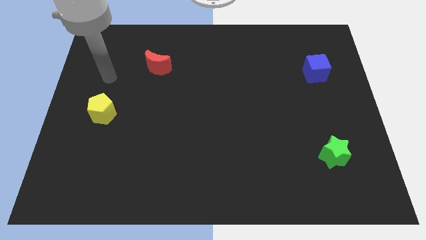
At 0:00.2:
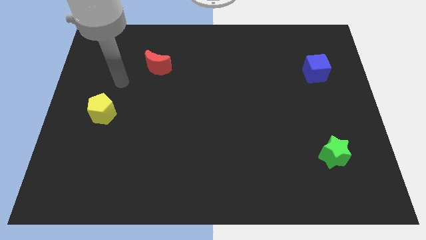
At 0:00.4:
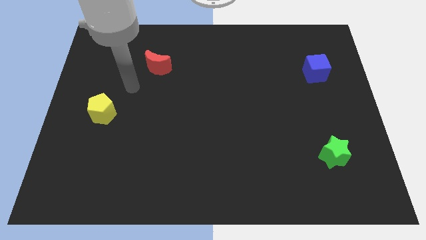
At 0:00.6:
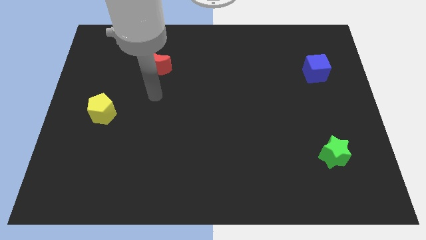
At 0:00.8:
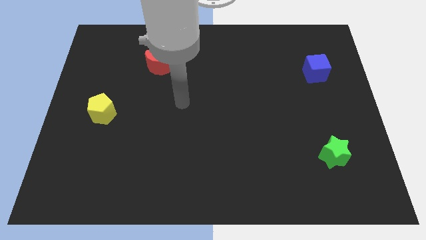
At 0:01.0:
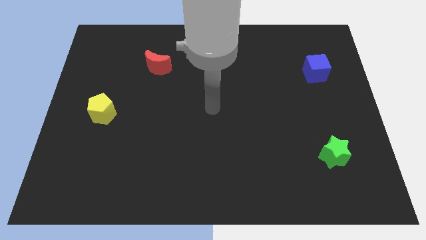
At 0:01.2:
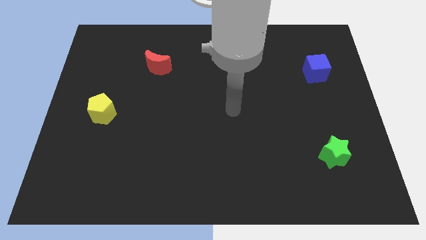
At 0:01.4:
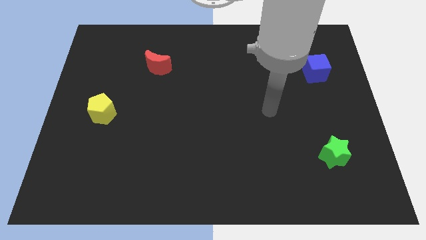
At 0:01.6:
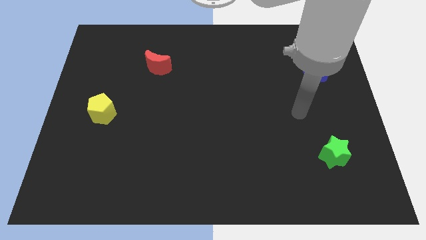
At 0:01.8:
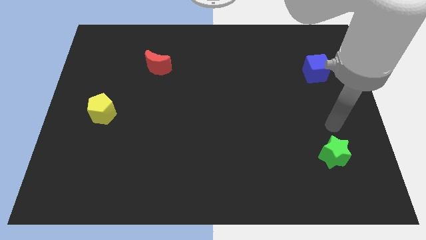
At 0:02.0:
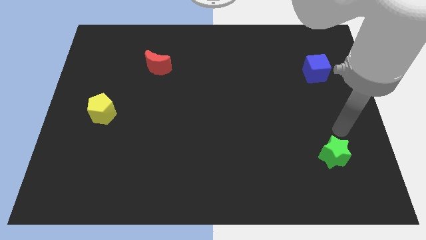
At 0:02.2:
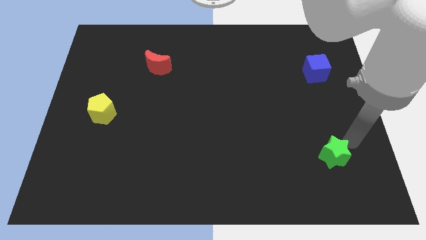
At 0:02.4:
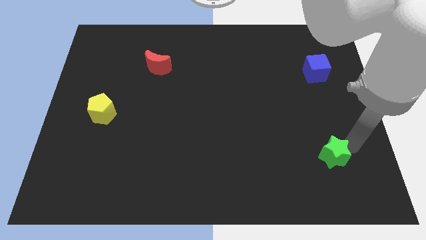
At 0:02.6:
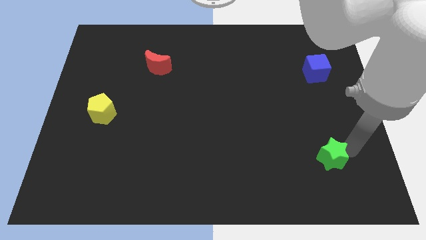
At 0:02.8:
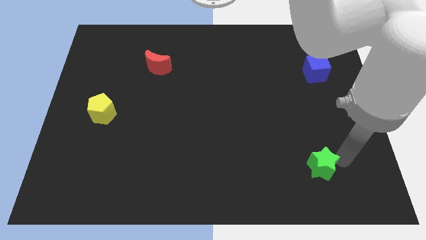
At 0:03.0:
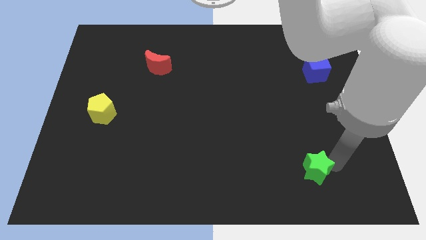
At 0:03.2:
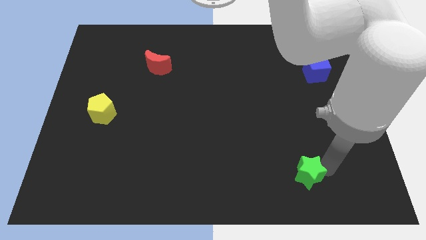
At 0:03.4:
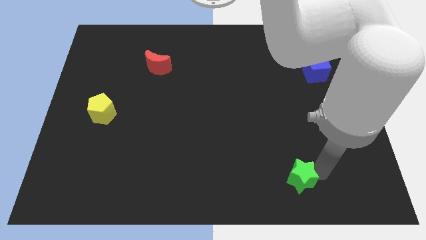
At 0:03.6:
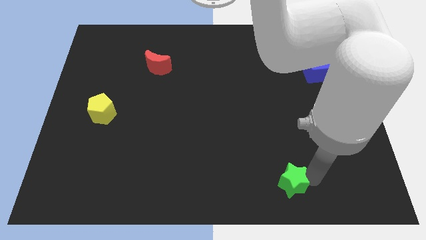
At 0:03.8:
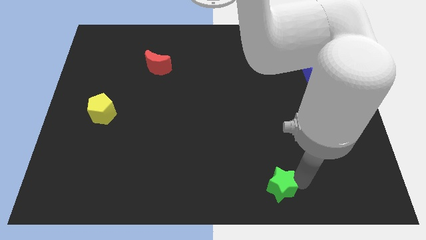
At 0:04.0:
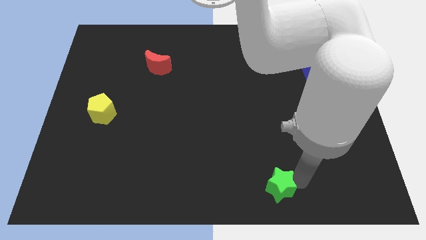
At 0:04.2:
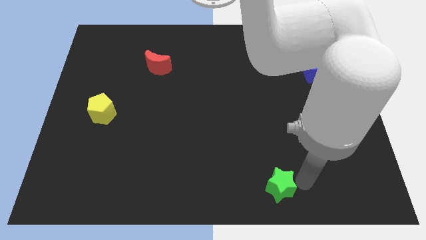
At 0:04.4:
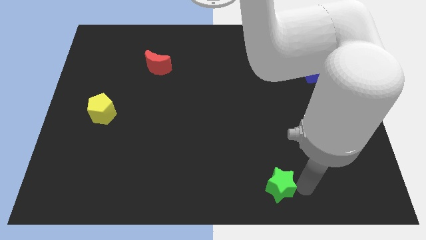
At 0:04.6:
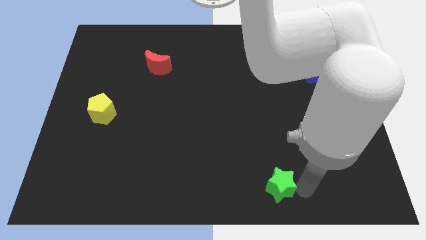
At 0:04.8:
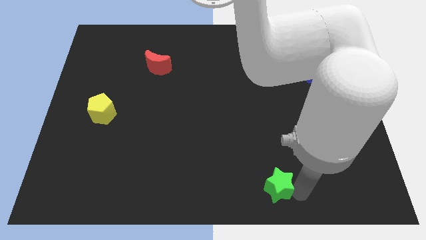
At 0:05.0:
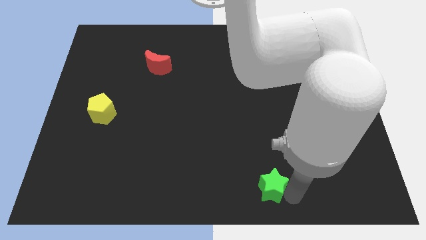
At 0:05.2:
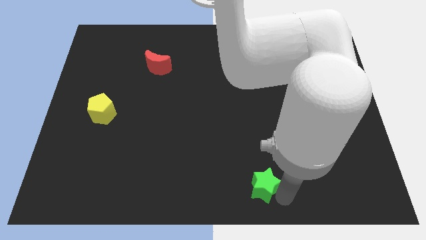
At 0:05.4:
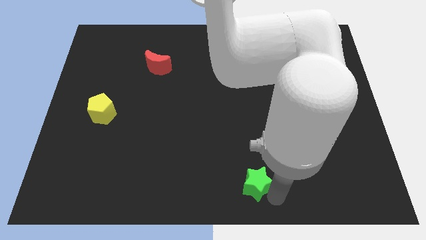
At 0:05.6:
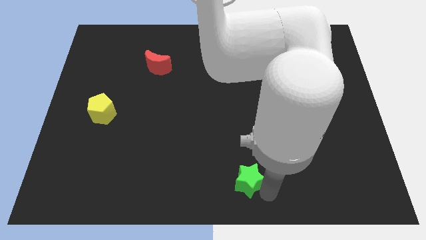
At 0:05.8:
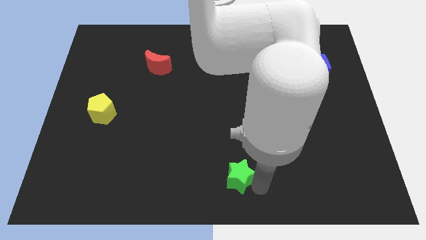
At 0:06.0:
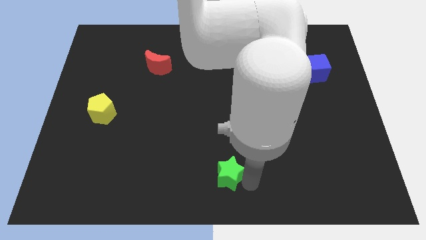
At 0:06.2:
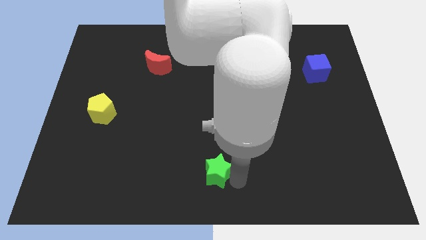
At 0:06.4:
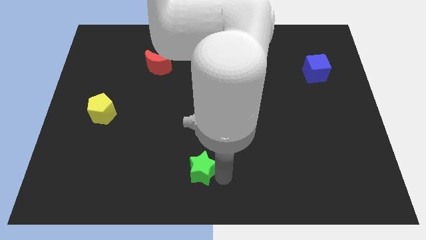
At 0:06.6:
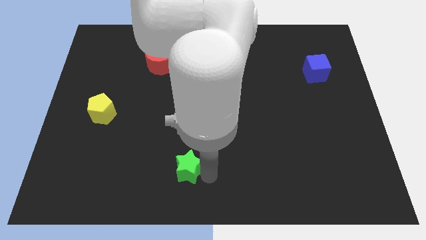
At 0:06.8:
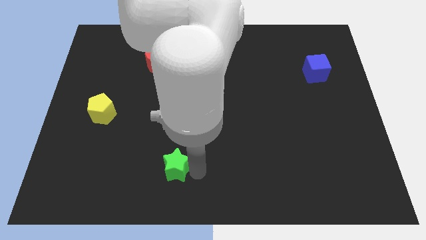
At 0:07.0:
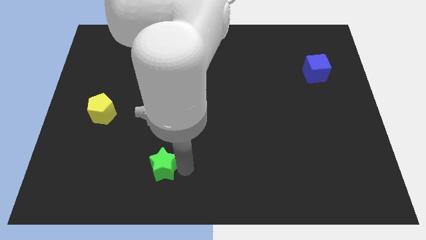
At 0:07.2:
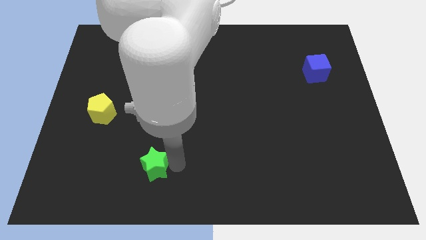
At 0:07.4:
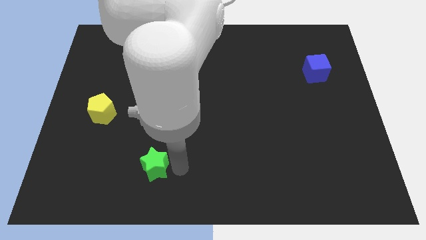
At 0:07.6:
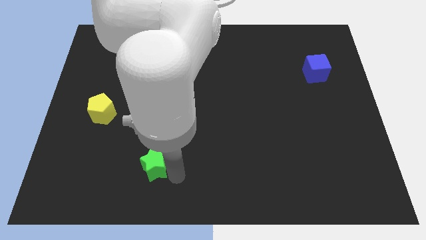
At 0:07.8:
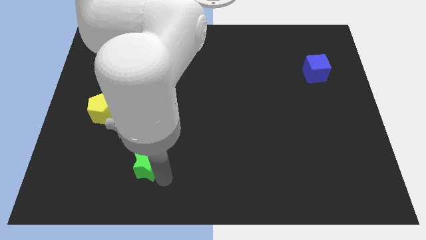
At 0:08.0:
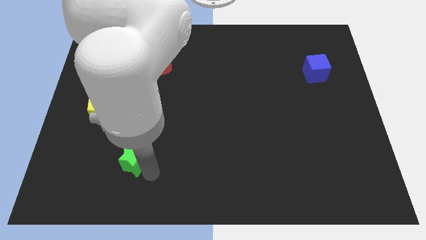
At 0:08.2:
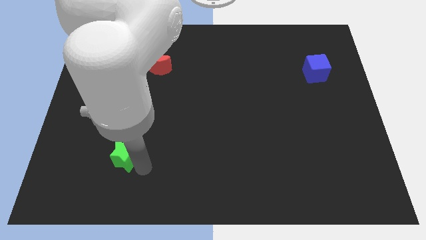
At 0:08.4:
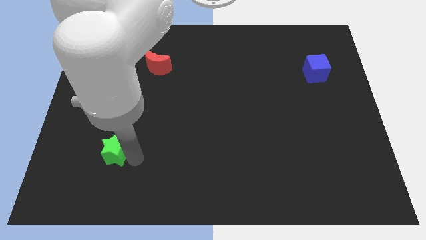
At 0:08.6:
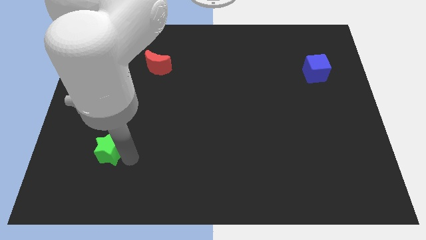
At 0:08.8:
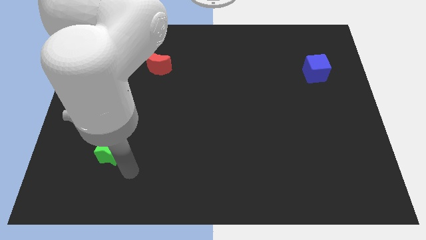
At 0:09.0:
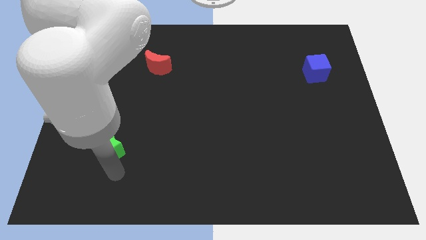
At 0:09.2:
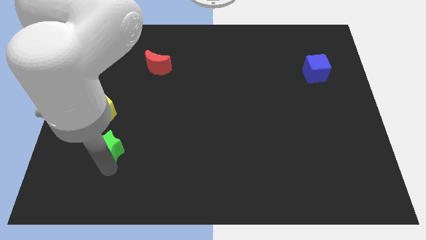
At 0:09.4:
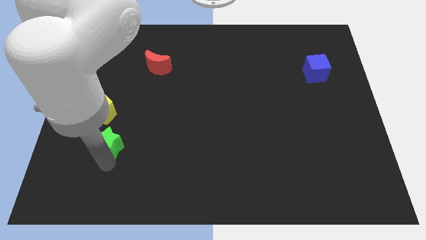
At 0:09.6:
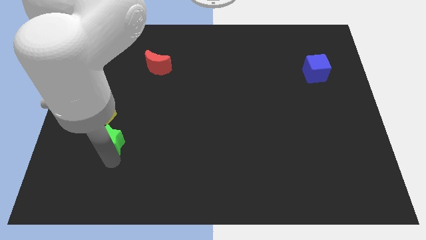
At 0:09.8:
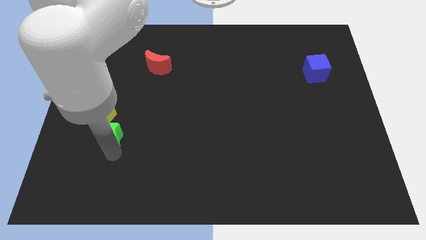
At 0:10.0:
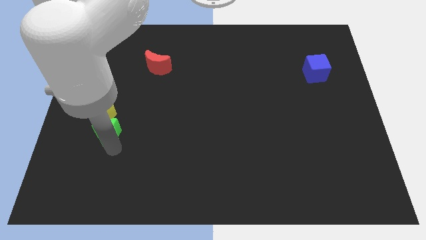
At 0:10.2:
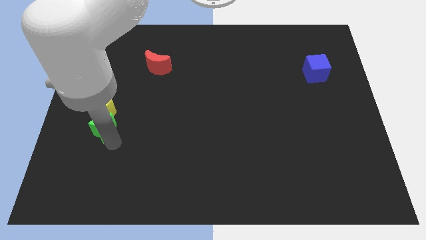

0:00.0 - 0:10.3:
put the green star close to the yellow block

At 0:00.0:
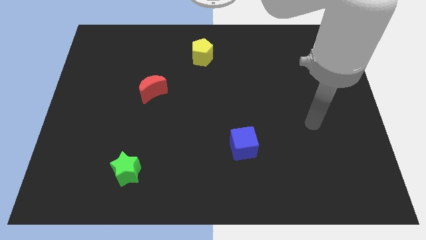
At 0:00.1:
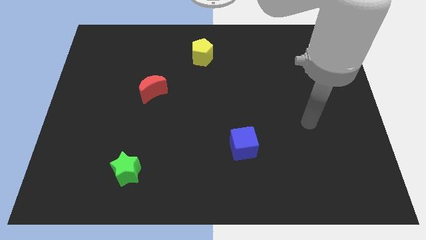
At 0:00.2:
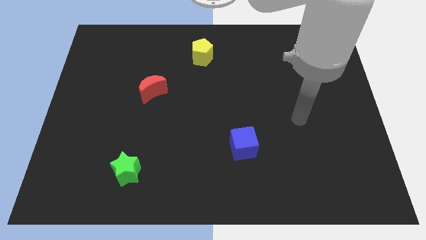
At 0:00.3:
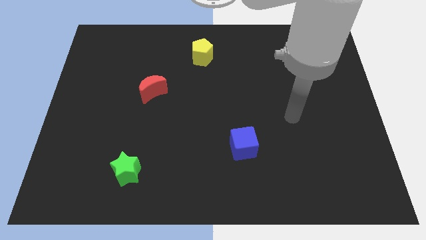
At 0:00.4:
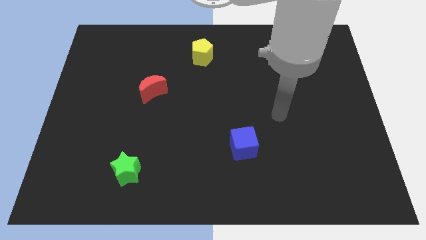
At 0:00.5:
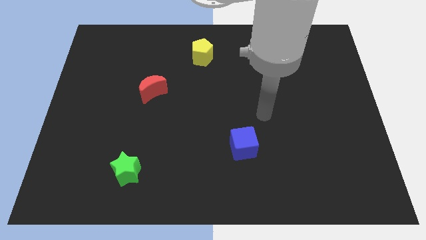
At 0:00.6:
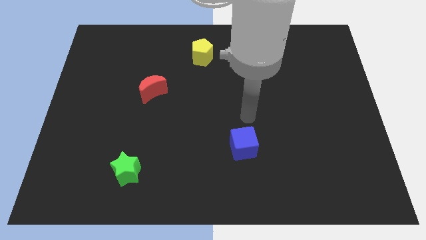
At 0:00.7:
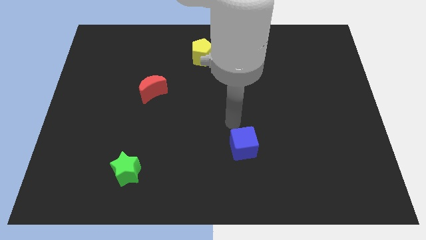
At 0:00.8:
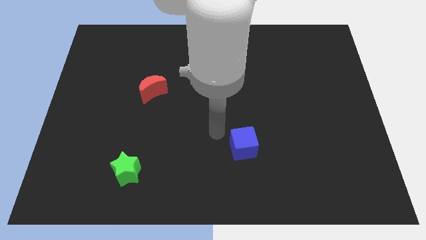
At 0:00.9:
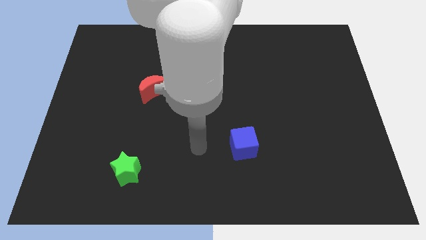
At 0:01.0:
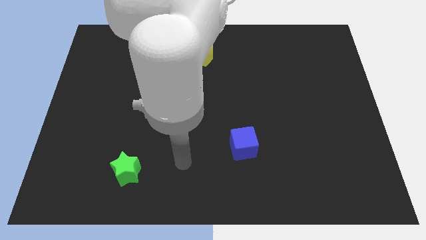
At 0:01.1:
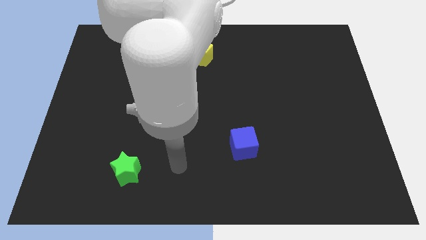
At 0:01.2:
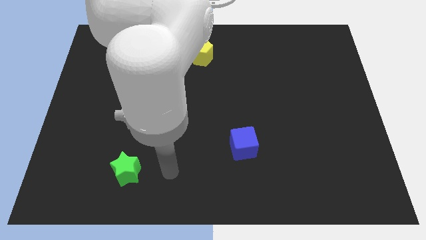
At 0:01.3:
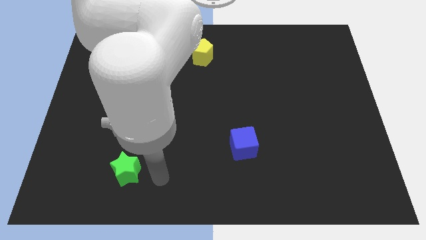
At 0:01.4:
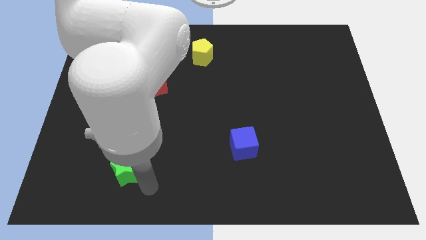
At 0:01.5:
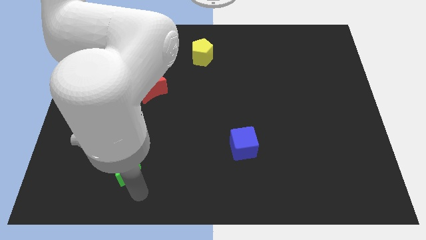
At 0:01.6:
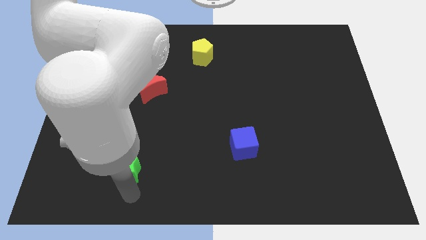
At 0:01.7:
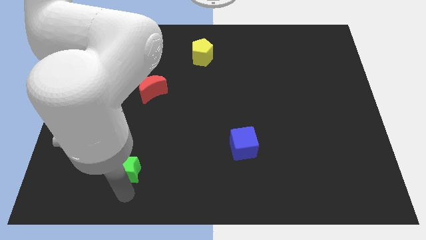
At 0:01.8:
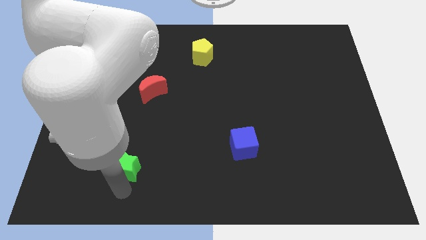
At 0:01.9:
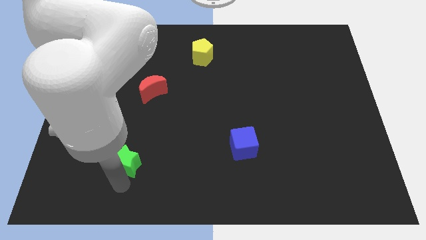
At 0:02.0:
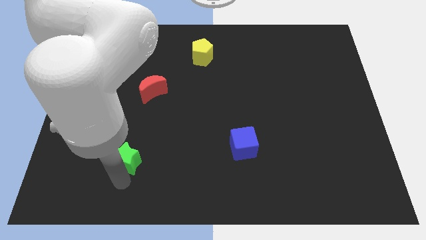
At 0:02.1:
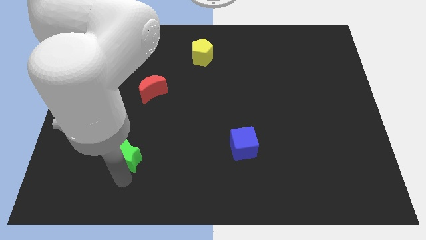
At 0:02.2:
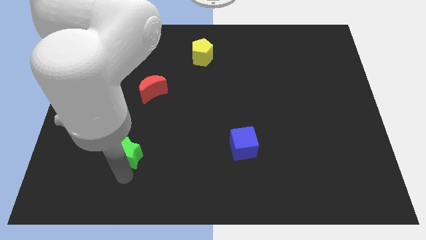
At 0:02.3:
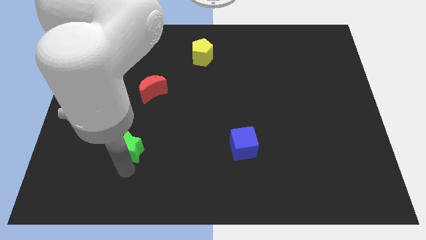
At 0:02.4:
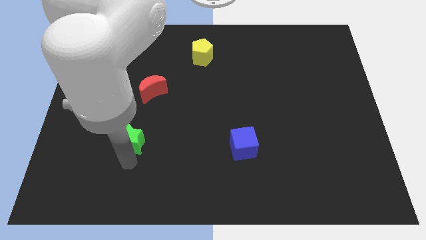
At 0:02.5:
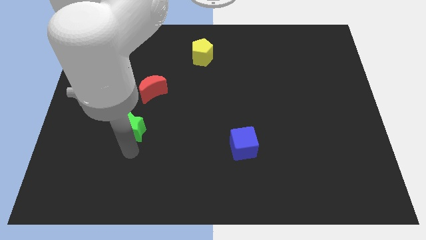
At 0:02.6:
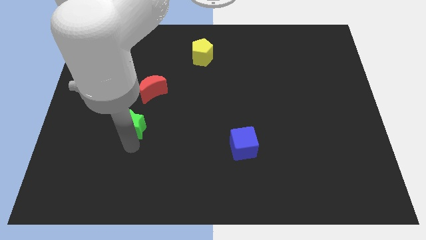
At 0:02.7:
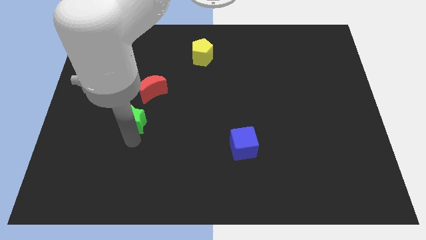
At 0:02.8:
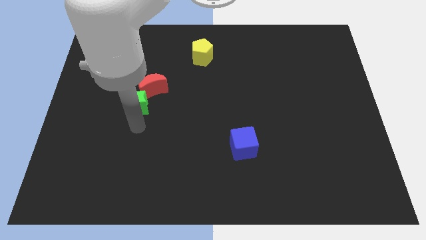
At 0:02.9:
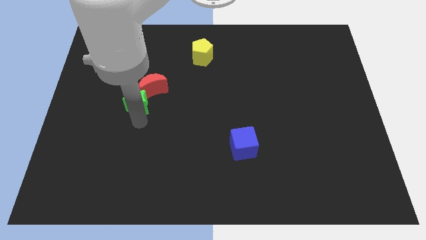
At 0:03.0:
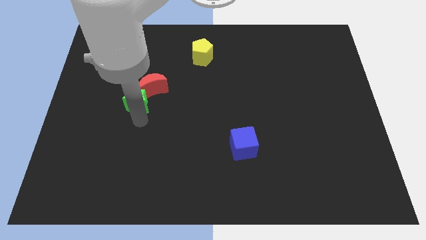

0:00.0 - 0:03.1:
slide the green star towards the red block

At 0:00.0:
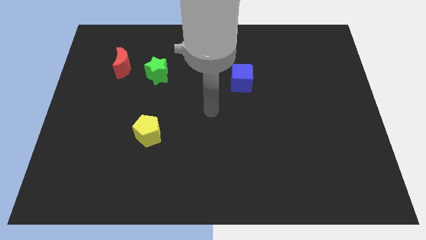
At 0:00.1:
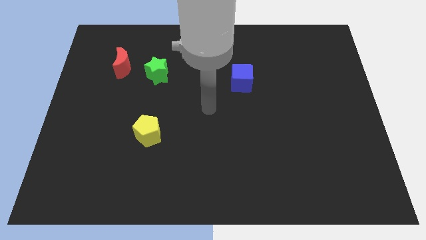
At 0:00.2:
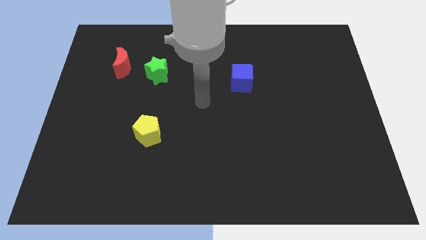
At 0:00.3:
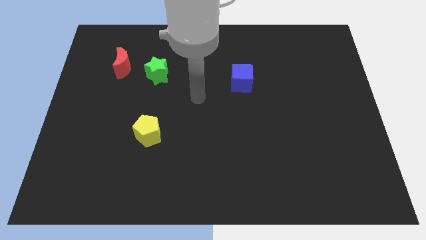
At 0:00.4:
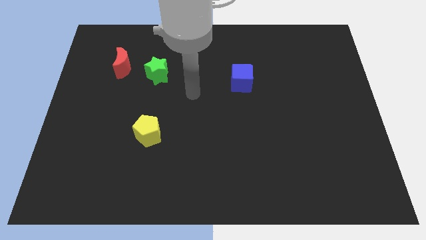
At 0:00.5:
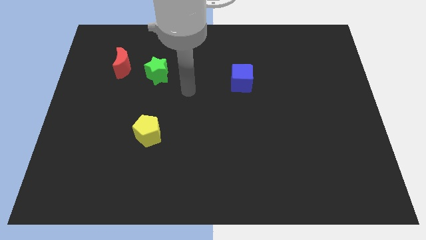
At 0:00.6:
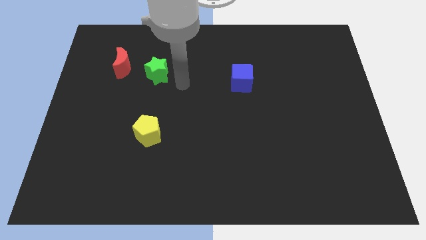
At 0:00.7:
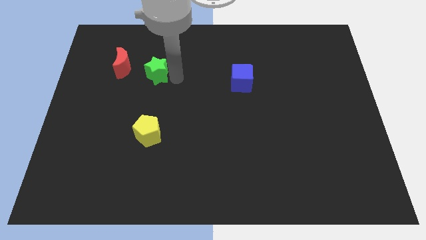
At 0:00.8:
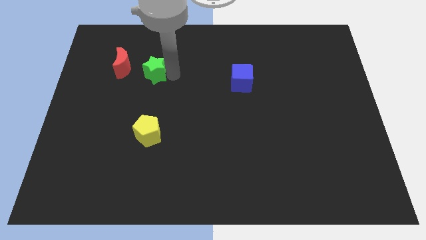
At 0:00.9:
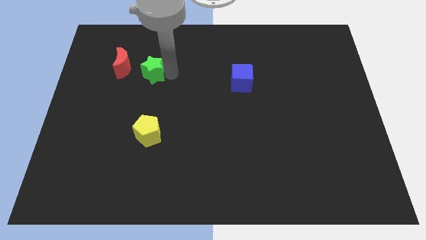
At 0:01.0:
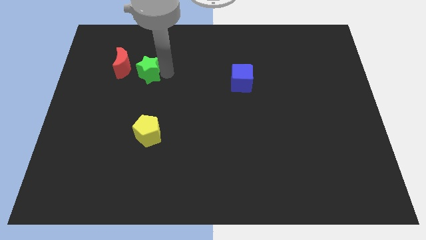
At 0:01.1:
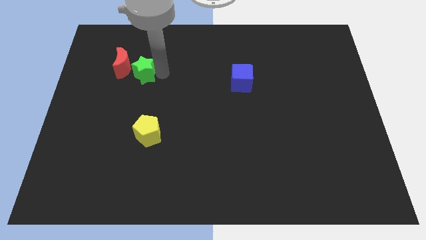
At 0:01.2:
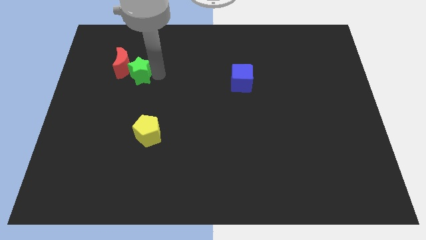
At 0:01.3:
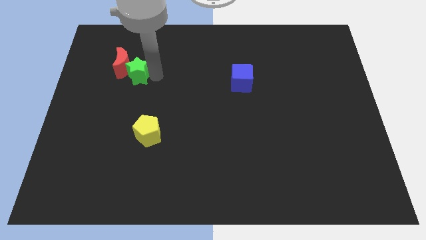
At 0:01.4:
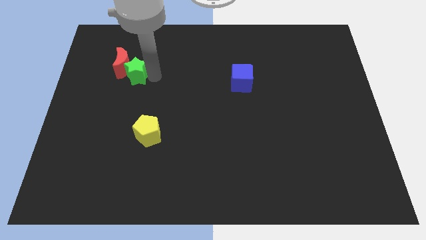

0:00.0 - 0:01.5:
slide the green block towards the red moon